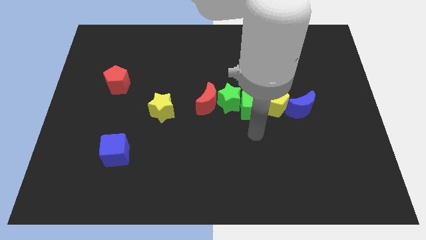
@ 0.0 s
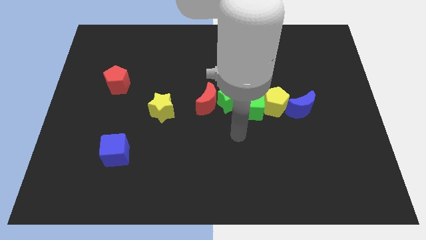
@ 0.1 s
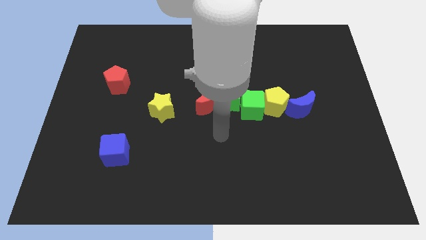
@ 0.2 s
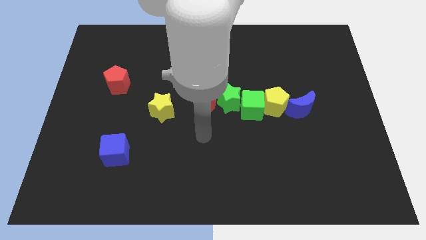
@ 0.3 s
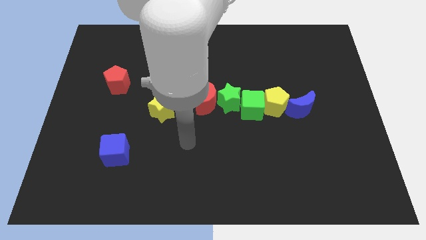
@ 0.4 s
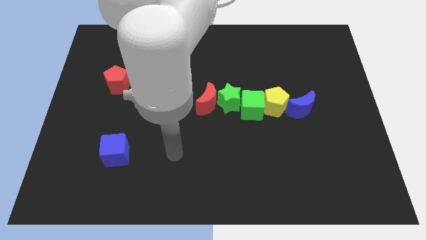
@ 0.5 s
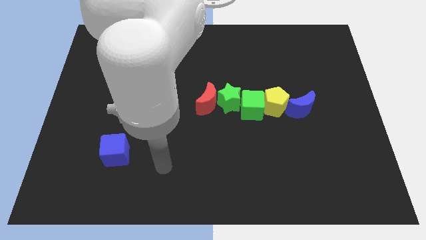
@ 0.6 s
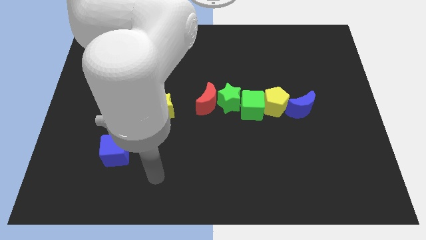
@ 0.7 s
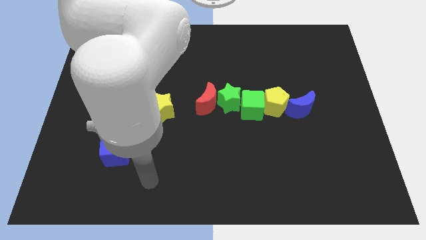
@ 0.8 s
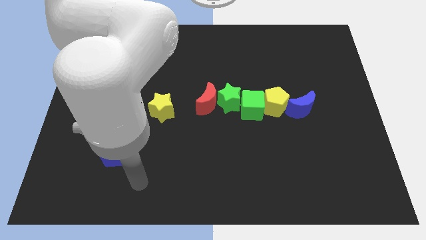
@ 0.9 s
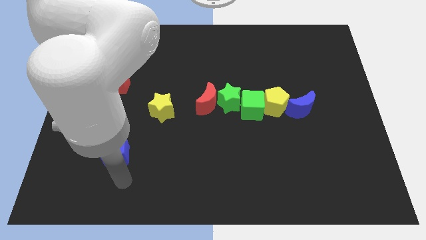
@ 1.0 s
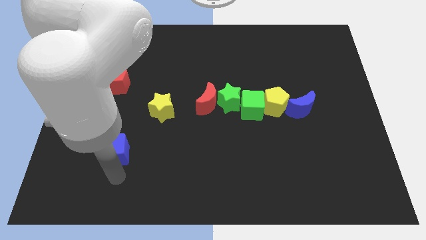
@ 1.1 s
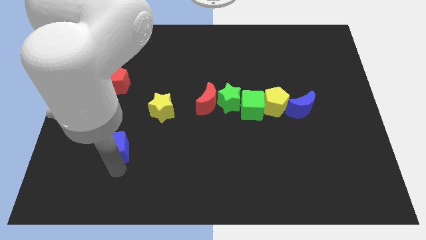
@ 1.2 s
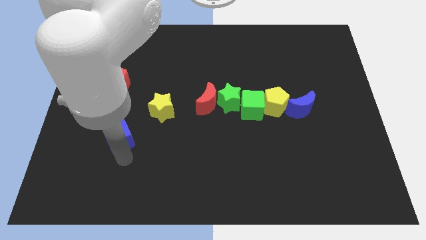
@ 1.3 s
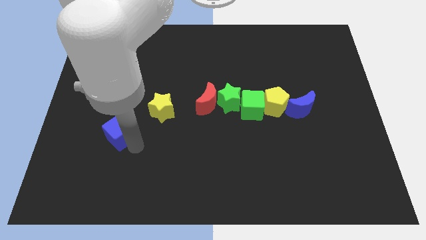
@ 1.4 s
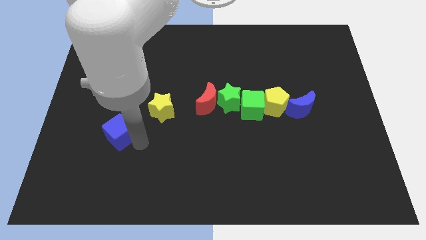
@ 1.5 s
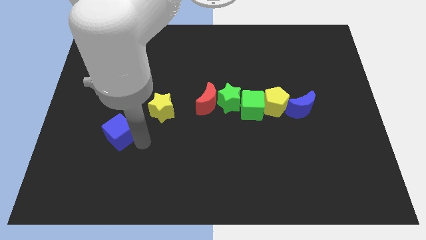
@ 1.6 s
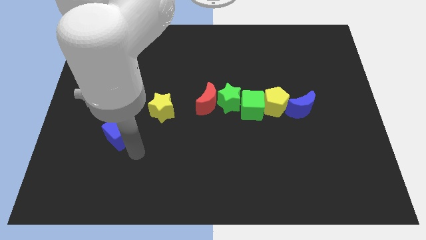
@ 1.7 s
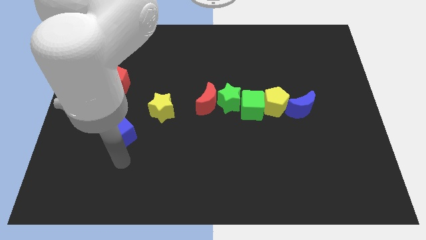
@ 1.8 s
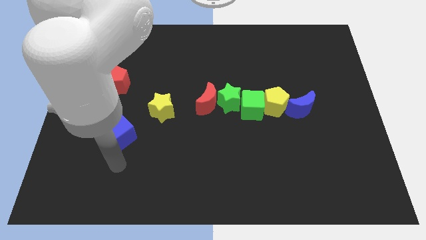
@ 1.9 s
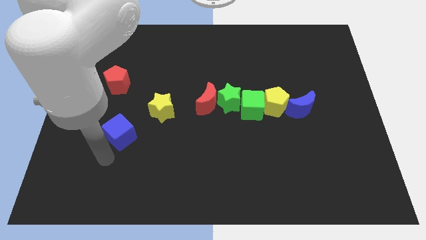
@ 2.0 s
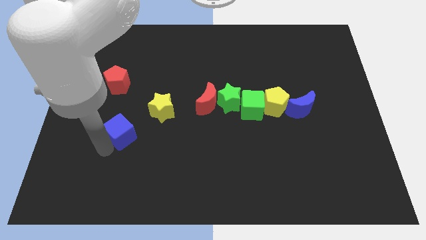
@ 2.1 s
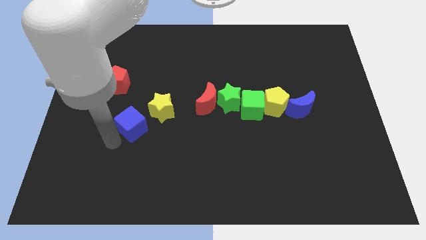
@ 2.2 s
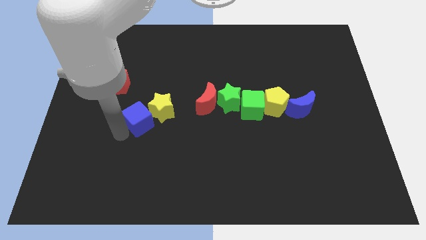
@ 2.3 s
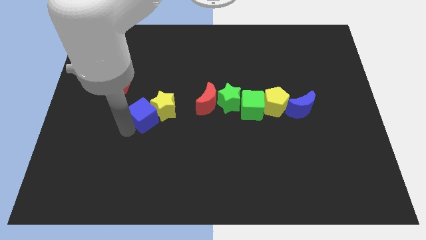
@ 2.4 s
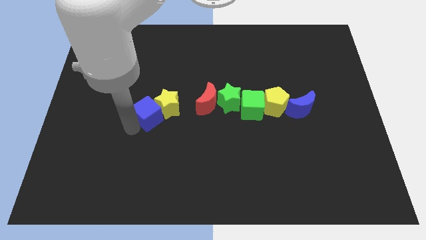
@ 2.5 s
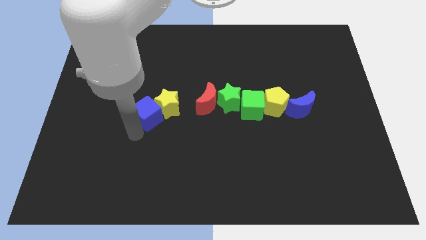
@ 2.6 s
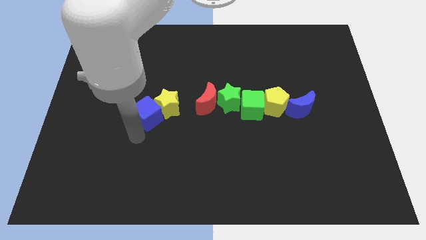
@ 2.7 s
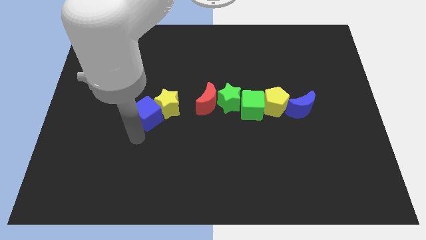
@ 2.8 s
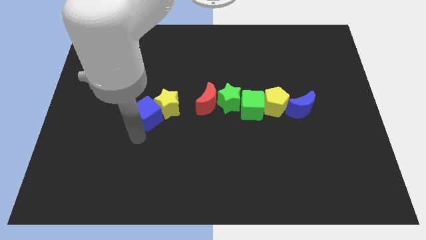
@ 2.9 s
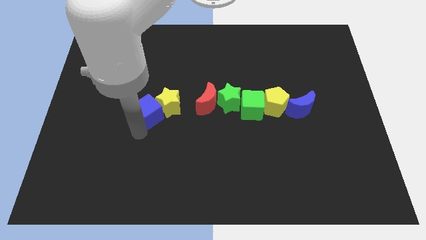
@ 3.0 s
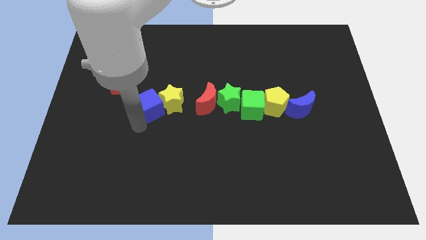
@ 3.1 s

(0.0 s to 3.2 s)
push the blue cube into the yellow star

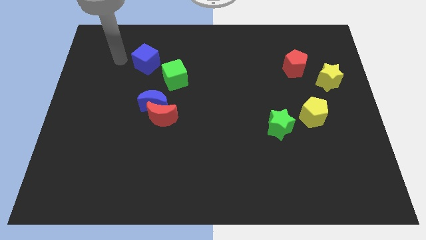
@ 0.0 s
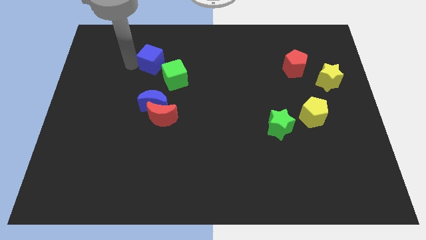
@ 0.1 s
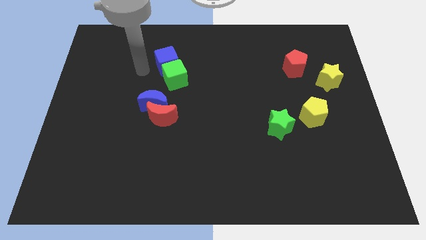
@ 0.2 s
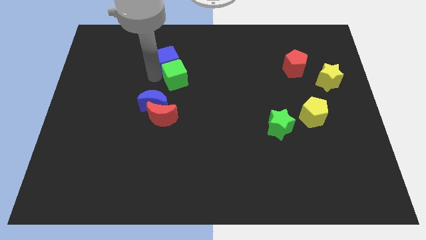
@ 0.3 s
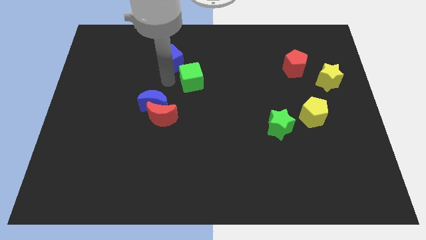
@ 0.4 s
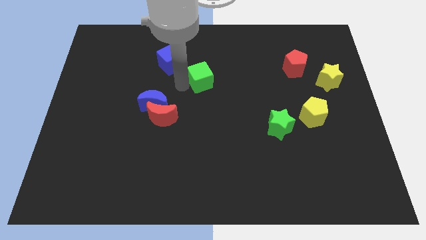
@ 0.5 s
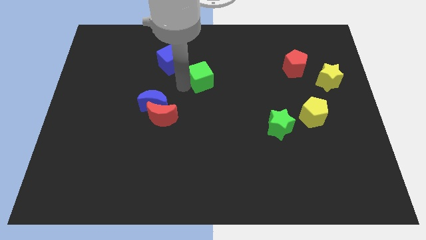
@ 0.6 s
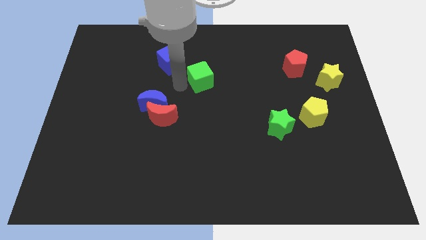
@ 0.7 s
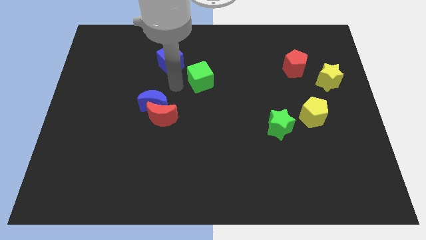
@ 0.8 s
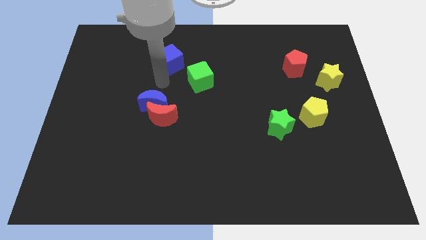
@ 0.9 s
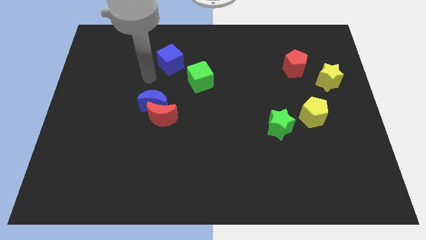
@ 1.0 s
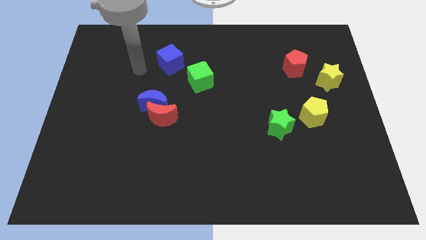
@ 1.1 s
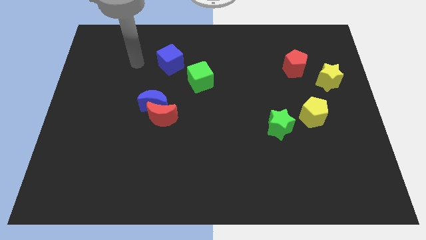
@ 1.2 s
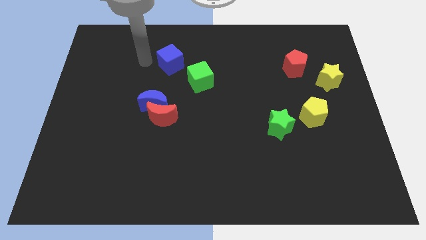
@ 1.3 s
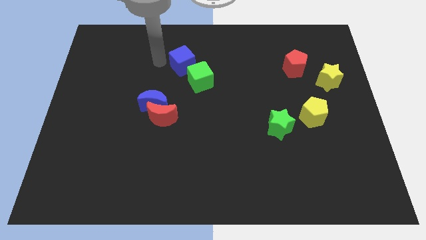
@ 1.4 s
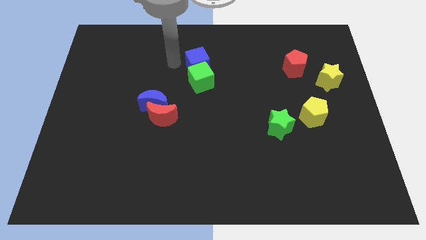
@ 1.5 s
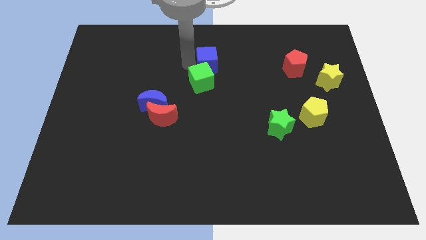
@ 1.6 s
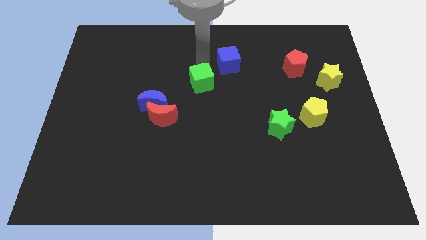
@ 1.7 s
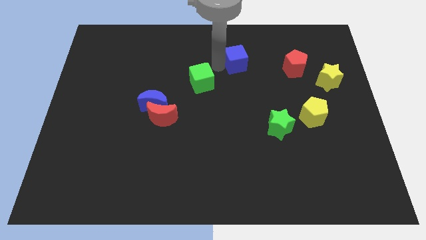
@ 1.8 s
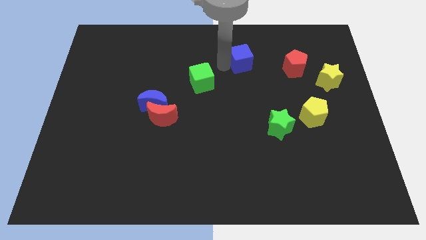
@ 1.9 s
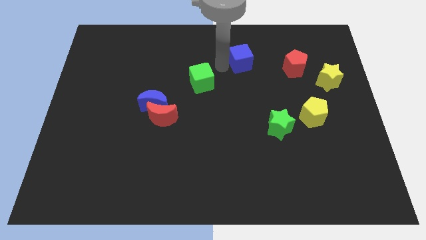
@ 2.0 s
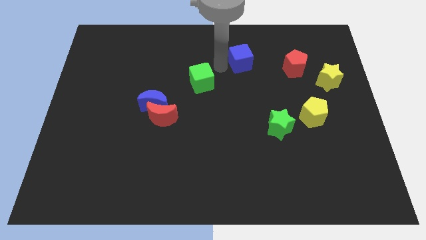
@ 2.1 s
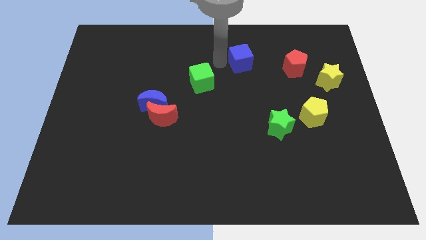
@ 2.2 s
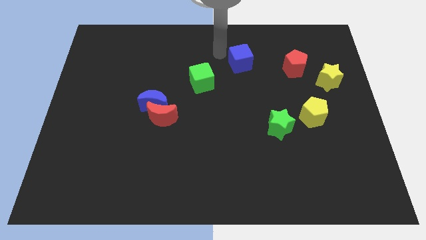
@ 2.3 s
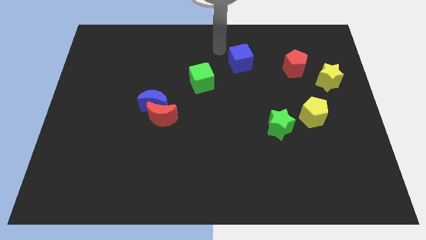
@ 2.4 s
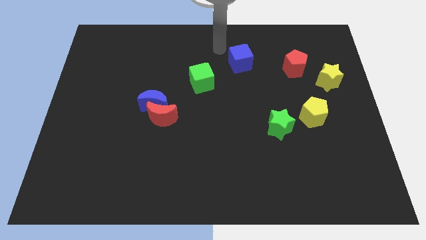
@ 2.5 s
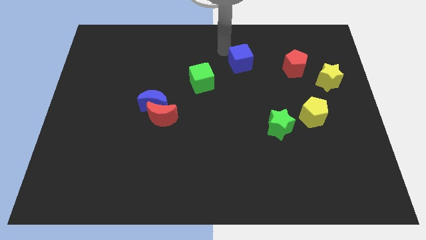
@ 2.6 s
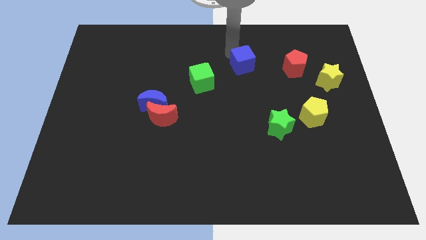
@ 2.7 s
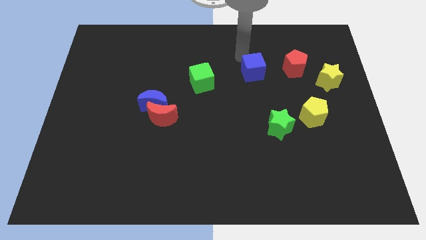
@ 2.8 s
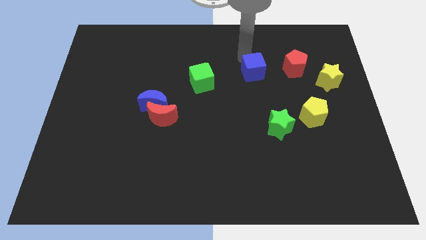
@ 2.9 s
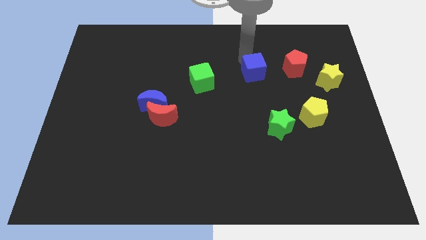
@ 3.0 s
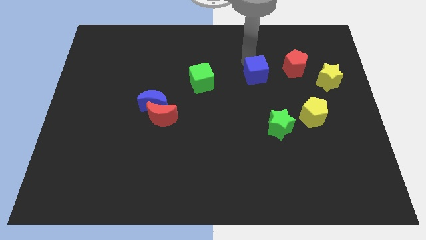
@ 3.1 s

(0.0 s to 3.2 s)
move the blue cube to the right of the red pentagon

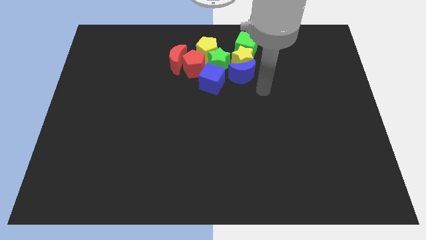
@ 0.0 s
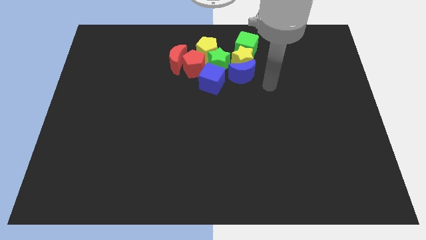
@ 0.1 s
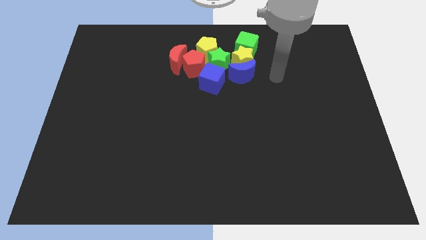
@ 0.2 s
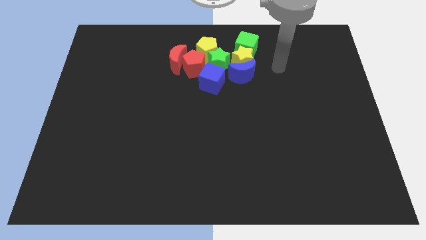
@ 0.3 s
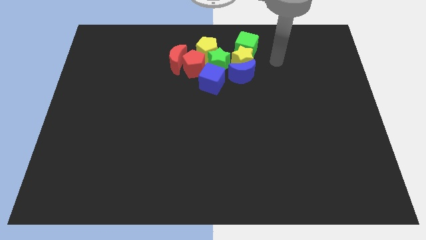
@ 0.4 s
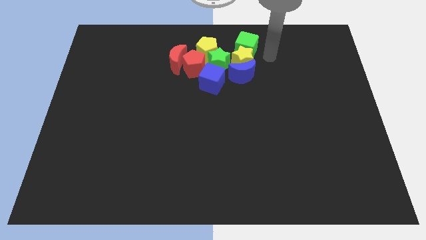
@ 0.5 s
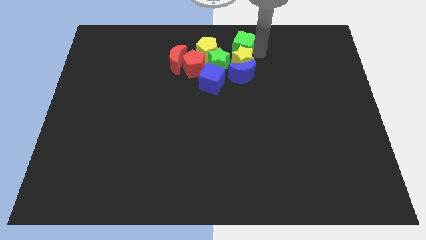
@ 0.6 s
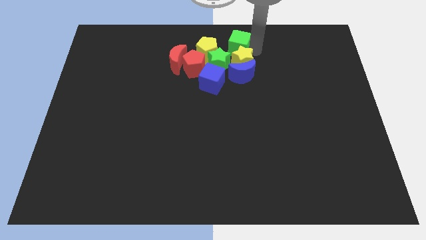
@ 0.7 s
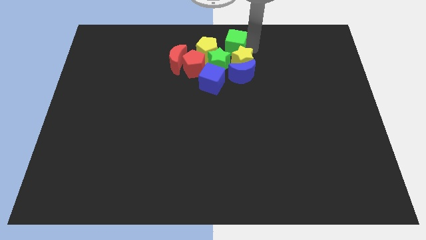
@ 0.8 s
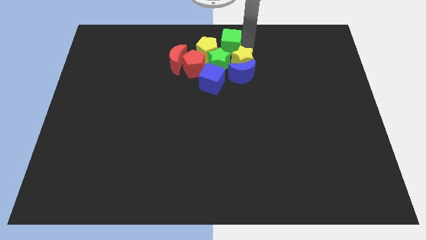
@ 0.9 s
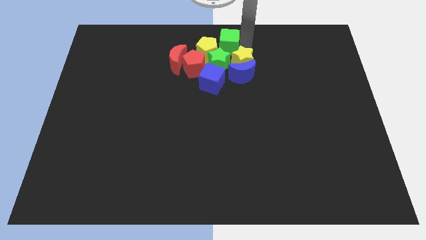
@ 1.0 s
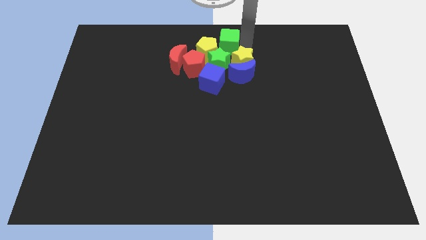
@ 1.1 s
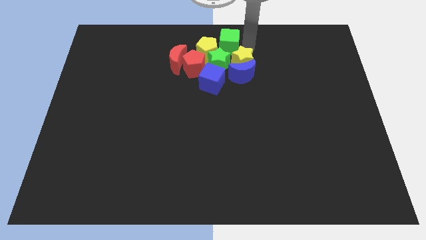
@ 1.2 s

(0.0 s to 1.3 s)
place the green cube to the right of the yellow pentagon

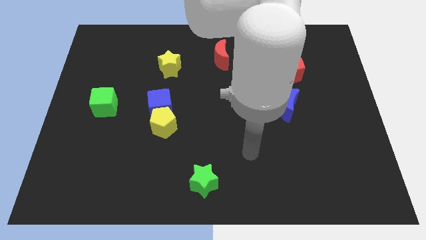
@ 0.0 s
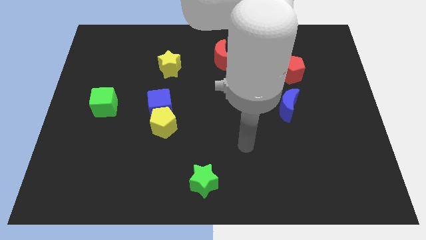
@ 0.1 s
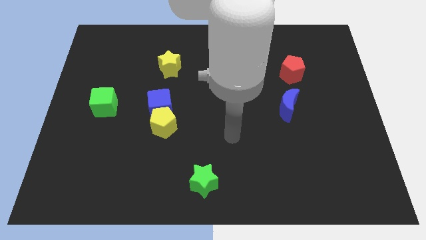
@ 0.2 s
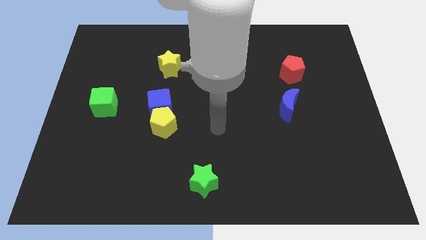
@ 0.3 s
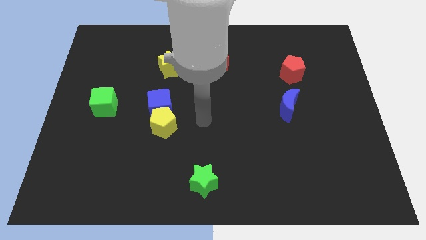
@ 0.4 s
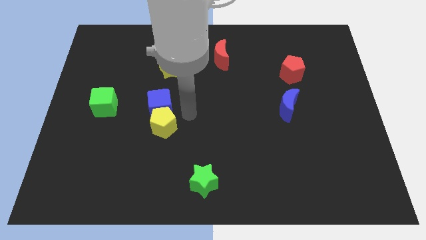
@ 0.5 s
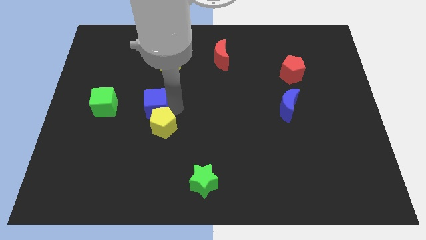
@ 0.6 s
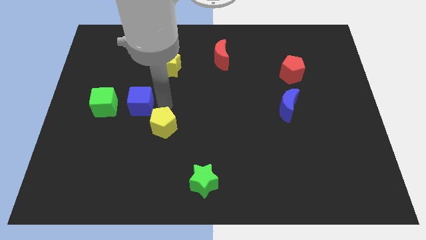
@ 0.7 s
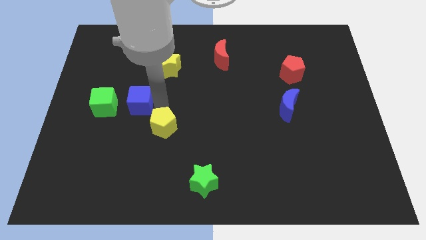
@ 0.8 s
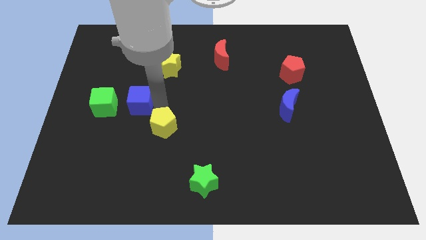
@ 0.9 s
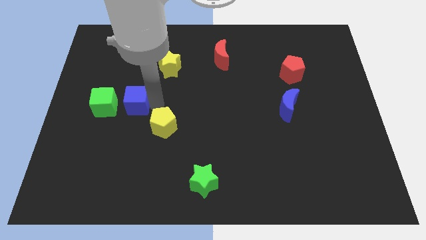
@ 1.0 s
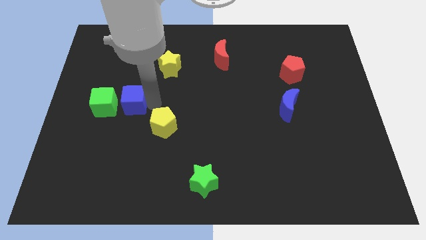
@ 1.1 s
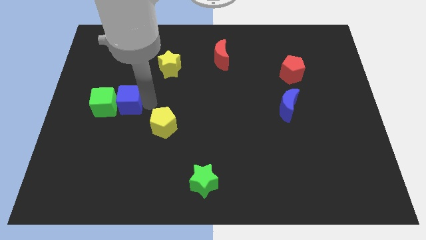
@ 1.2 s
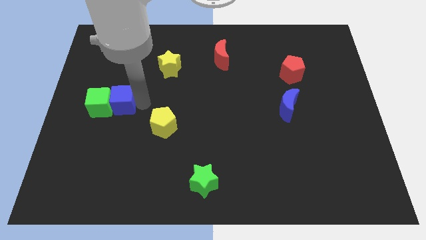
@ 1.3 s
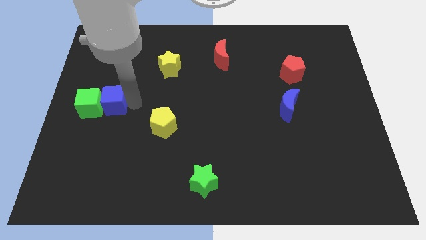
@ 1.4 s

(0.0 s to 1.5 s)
move the blue cube into the green cube
